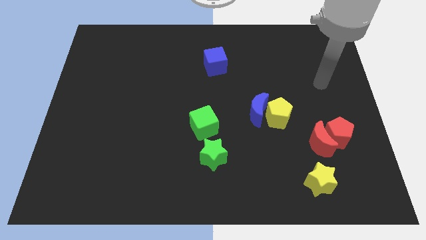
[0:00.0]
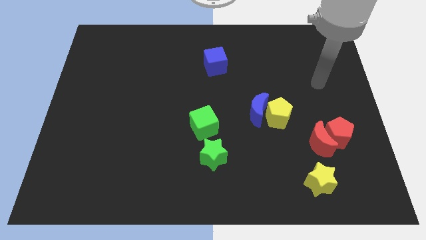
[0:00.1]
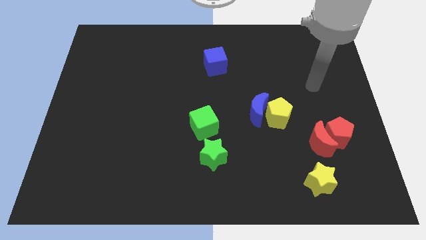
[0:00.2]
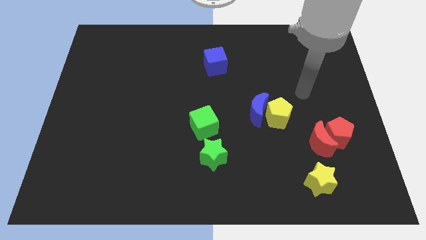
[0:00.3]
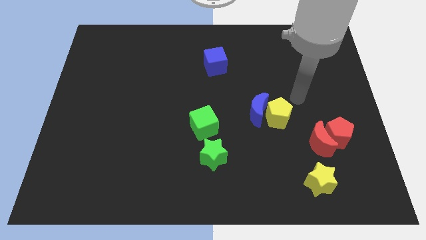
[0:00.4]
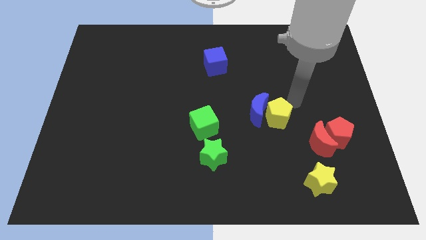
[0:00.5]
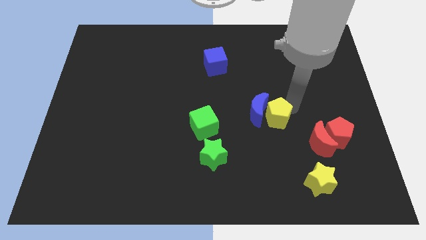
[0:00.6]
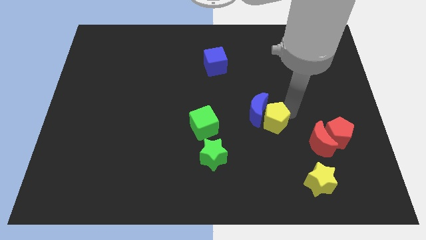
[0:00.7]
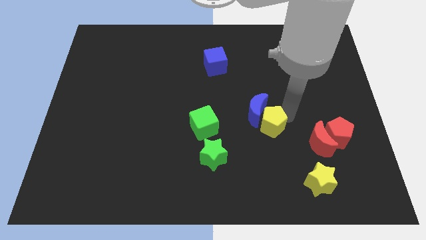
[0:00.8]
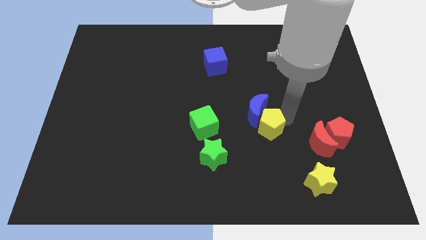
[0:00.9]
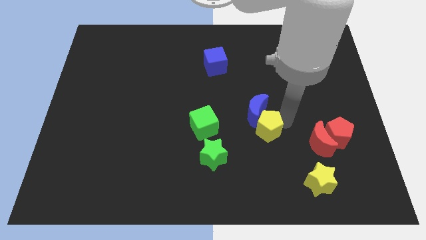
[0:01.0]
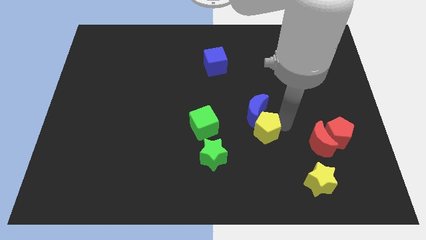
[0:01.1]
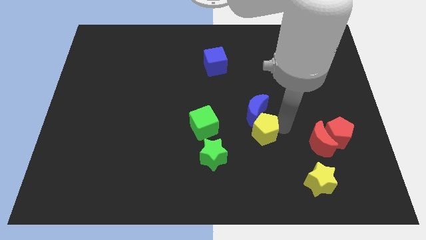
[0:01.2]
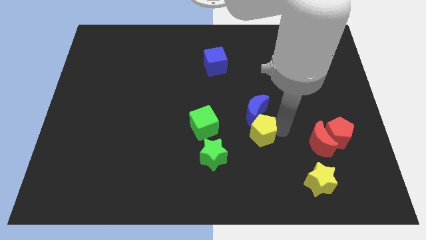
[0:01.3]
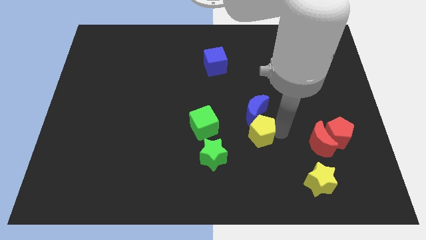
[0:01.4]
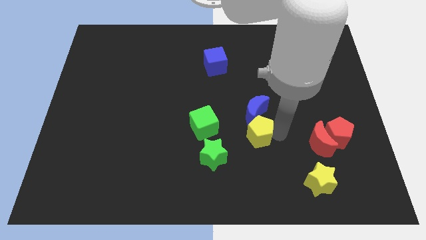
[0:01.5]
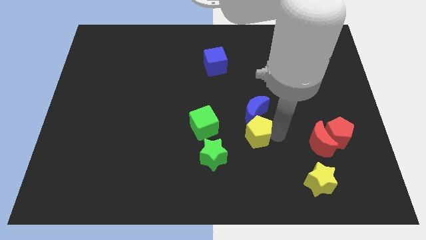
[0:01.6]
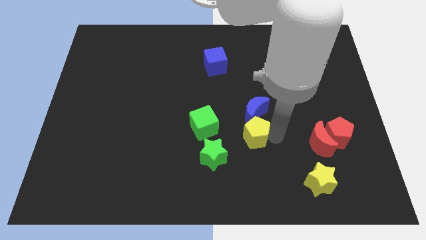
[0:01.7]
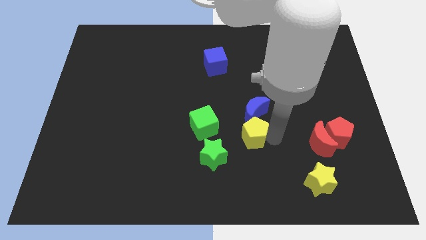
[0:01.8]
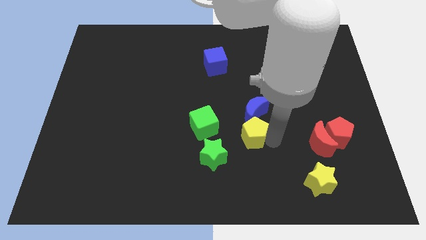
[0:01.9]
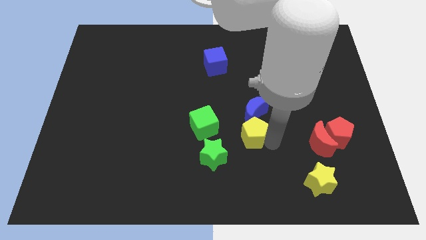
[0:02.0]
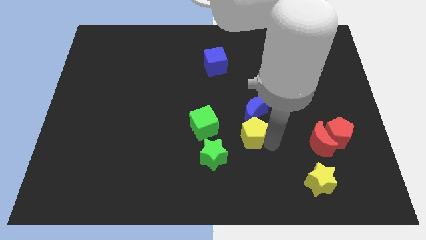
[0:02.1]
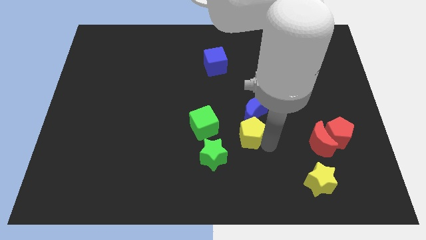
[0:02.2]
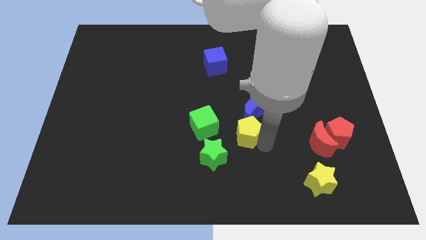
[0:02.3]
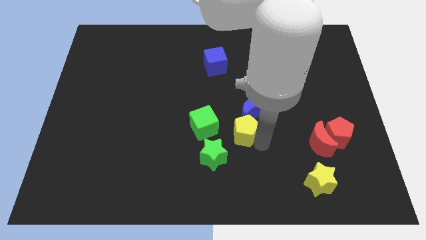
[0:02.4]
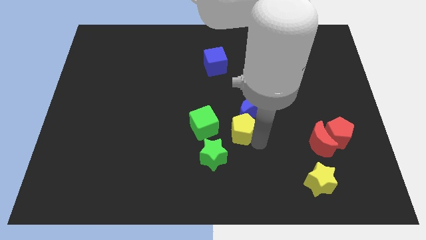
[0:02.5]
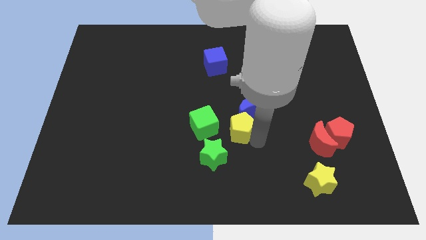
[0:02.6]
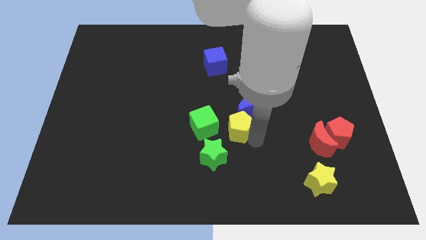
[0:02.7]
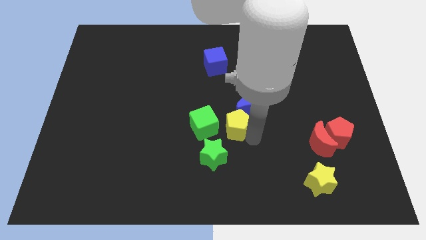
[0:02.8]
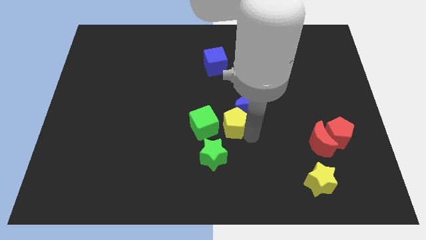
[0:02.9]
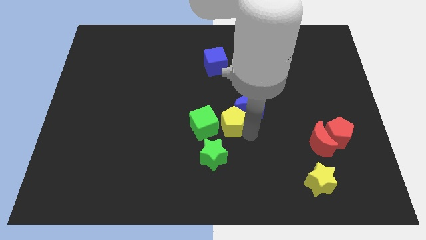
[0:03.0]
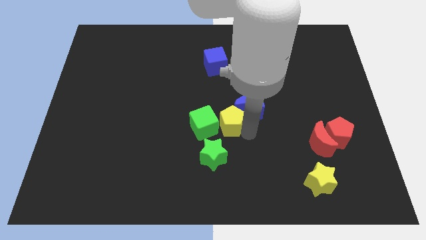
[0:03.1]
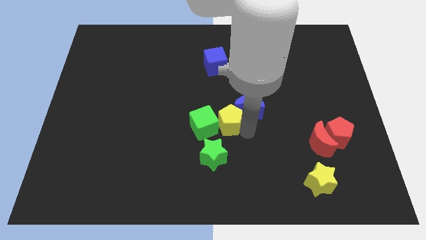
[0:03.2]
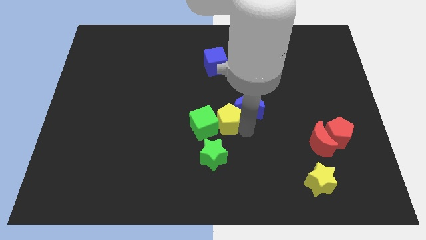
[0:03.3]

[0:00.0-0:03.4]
push the yellow pentagon to the green cube

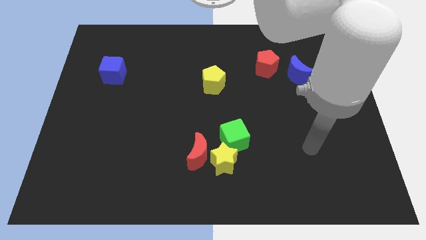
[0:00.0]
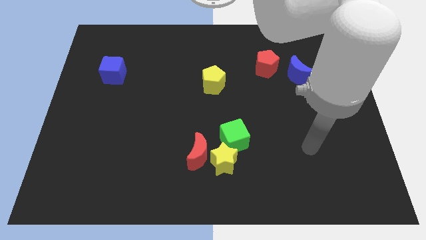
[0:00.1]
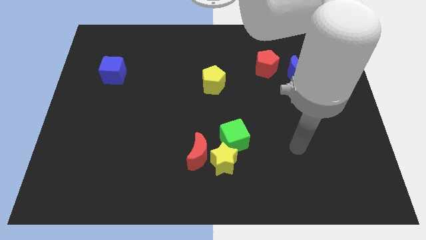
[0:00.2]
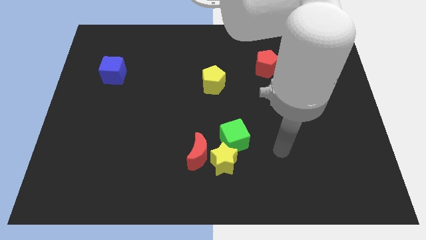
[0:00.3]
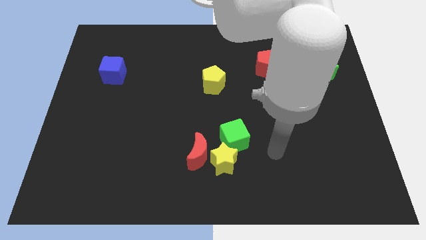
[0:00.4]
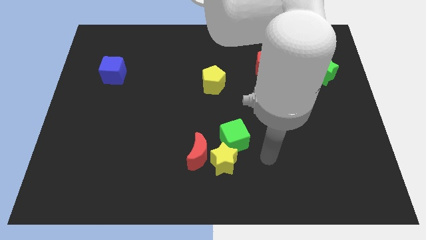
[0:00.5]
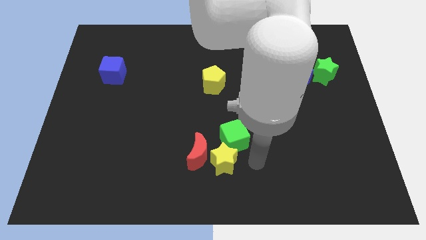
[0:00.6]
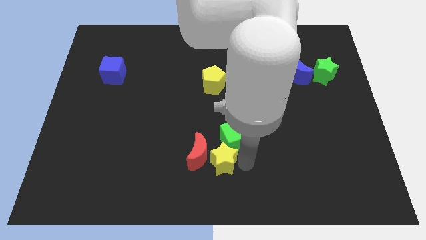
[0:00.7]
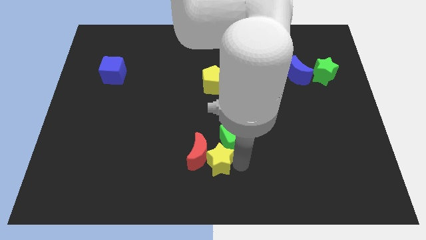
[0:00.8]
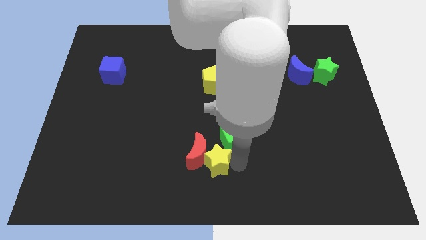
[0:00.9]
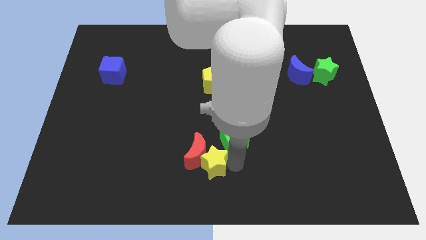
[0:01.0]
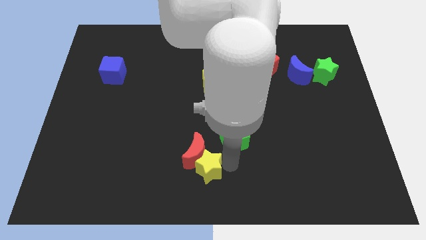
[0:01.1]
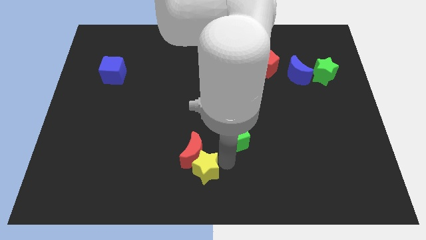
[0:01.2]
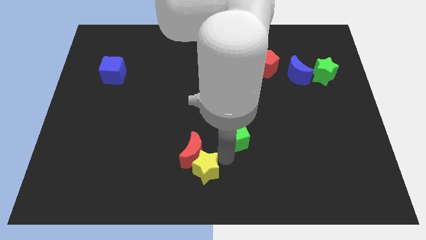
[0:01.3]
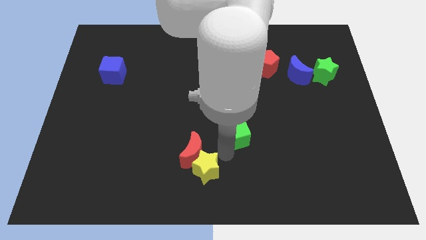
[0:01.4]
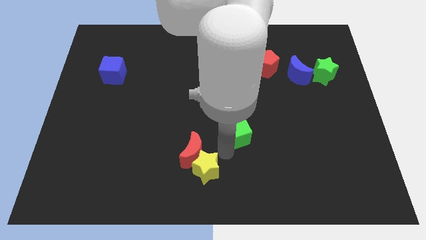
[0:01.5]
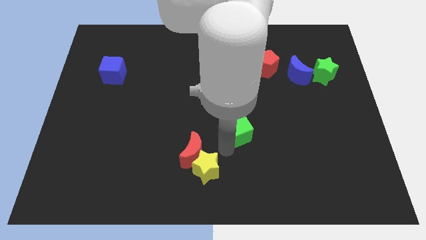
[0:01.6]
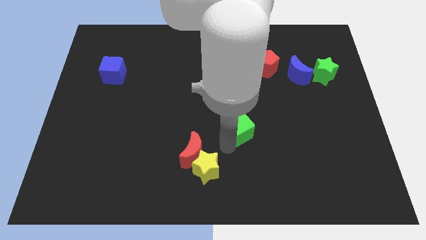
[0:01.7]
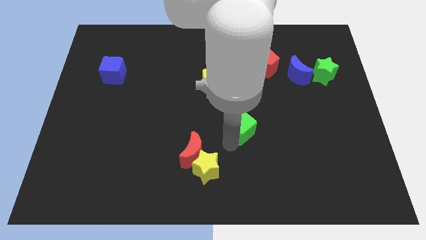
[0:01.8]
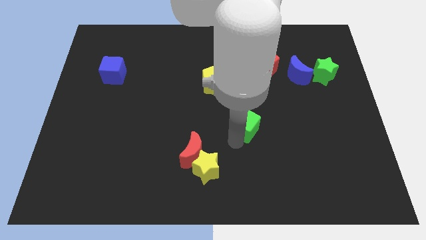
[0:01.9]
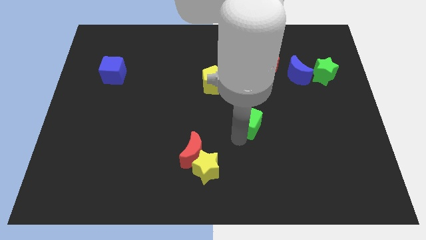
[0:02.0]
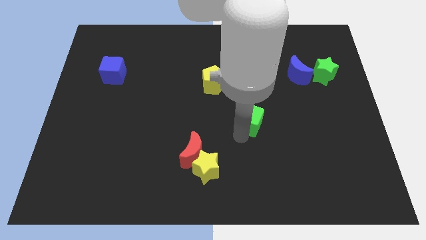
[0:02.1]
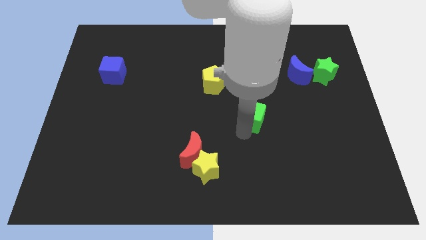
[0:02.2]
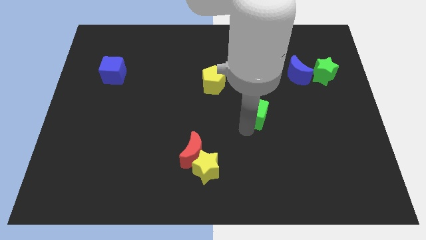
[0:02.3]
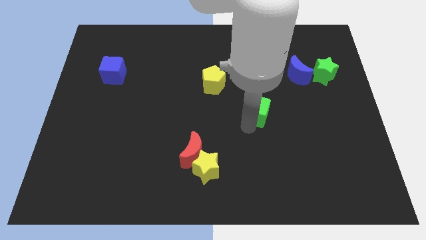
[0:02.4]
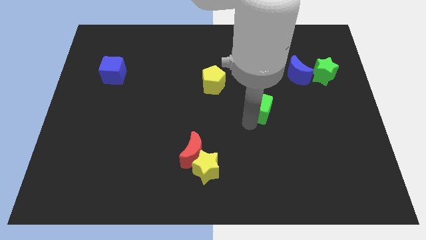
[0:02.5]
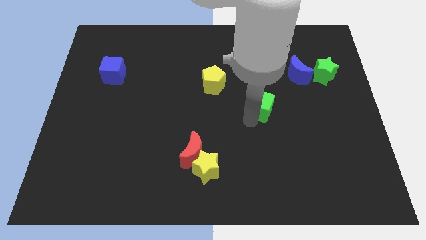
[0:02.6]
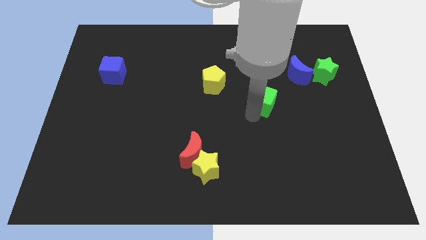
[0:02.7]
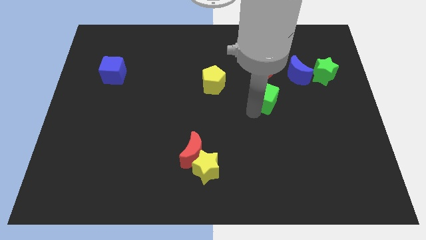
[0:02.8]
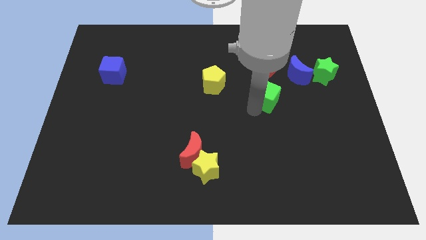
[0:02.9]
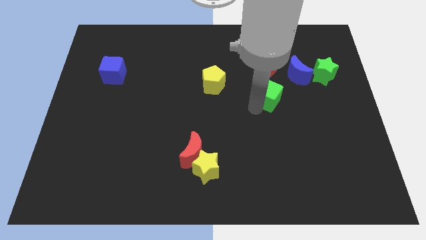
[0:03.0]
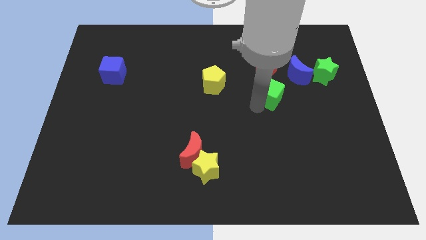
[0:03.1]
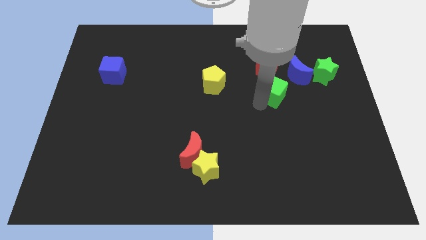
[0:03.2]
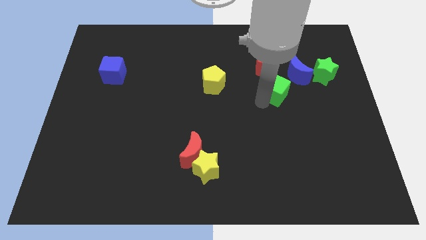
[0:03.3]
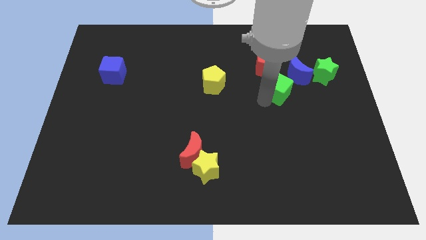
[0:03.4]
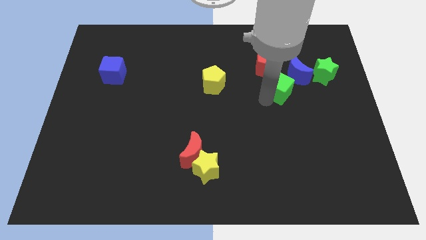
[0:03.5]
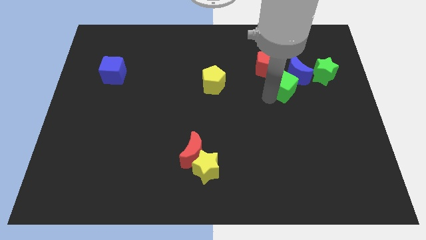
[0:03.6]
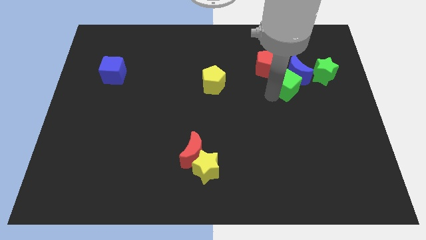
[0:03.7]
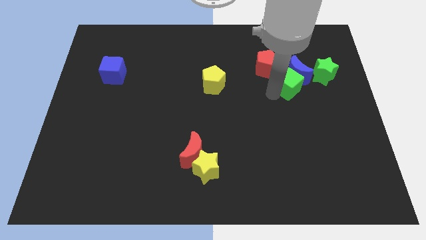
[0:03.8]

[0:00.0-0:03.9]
put the green cube close to the blue moon

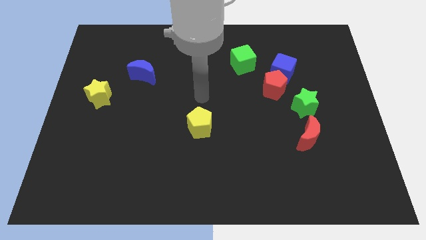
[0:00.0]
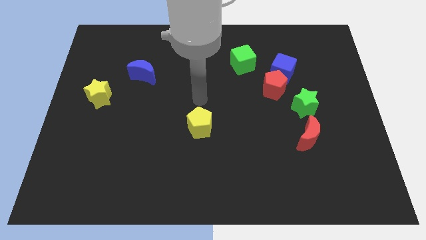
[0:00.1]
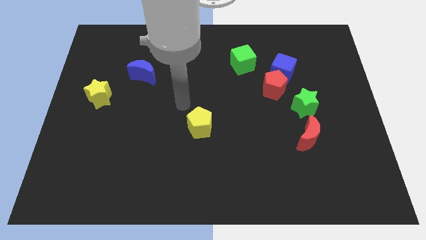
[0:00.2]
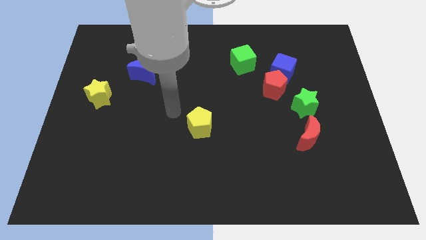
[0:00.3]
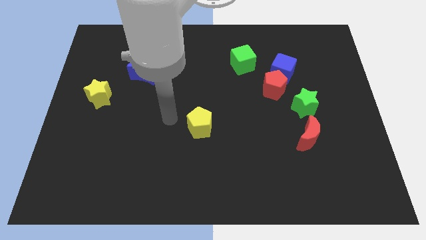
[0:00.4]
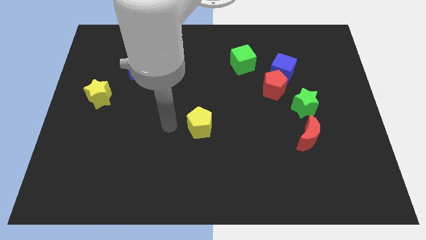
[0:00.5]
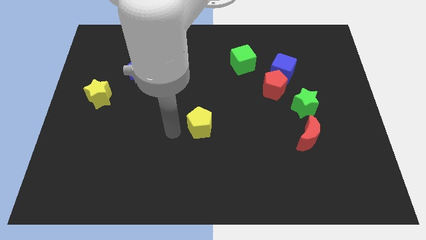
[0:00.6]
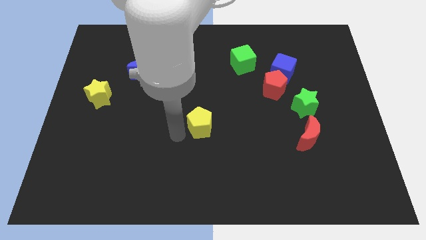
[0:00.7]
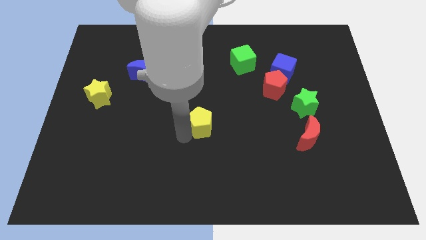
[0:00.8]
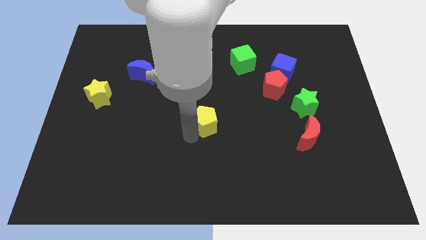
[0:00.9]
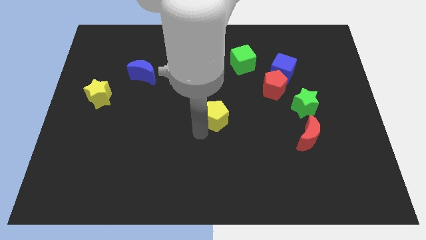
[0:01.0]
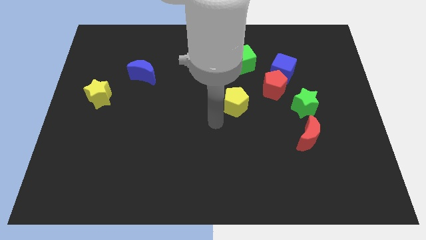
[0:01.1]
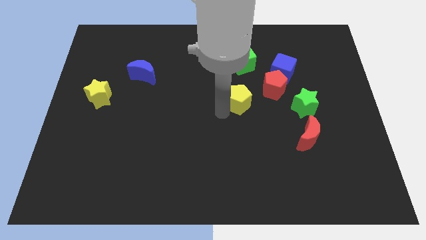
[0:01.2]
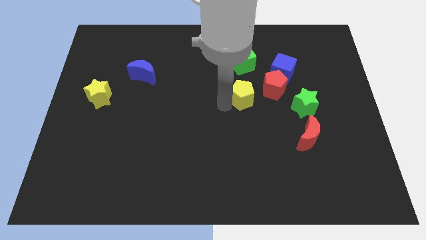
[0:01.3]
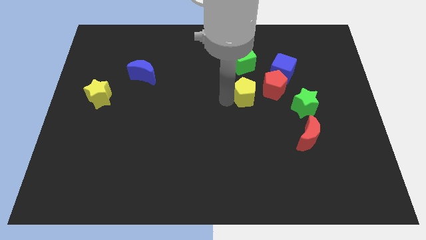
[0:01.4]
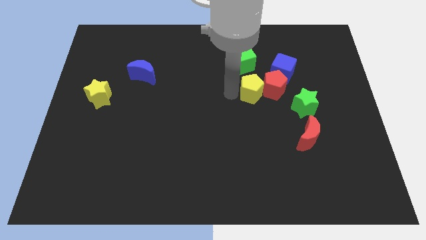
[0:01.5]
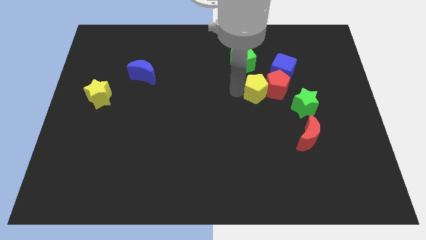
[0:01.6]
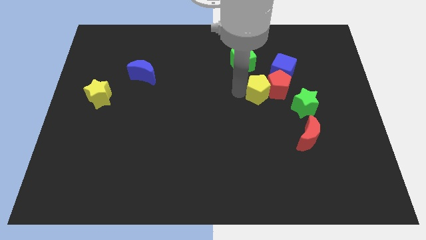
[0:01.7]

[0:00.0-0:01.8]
push the yellow pentagon next to the red pentagon
